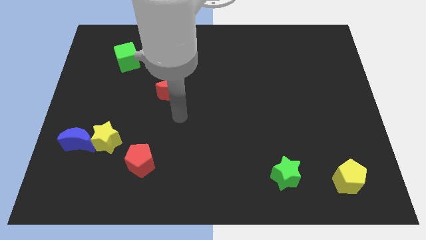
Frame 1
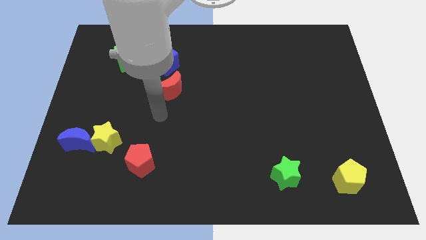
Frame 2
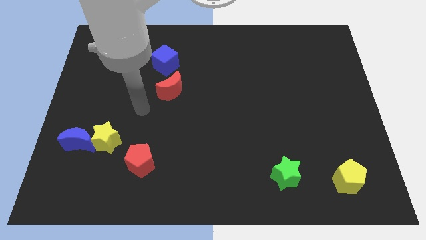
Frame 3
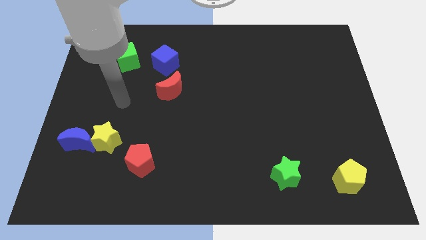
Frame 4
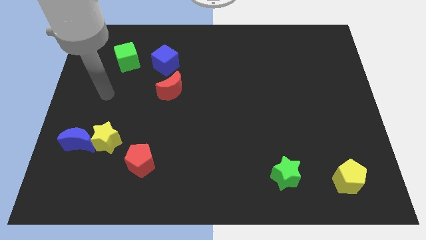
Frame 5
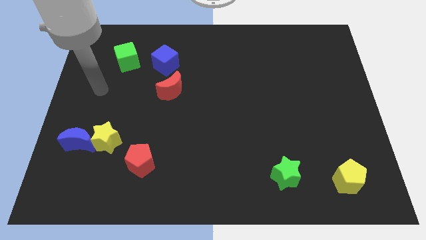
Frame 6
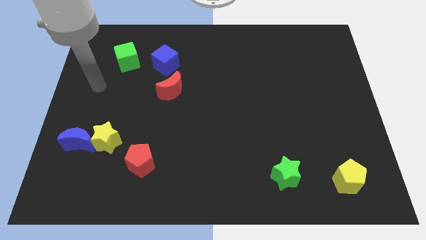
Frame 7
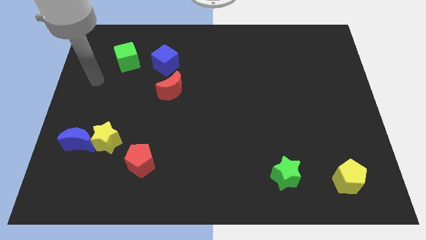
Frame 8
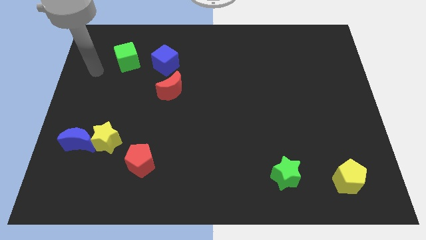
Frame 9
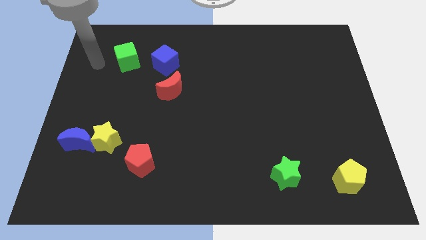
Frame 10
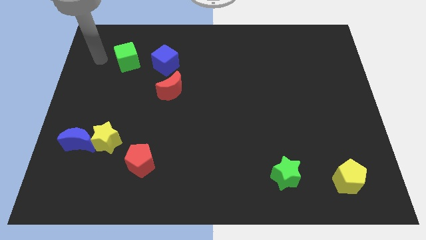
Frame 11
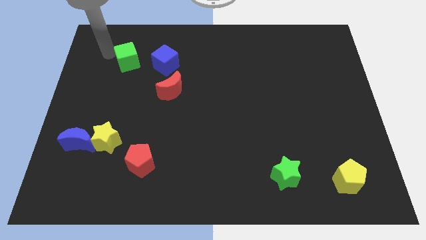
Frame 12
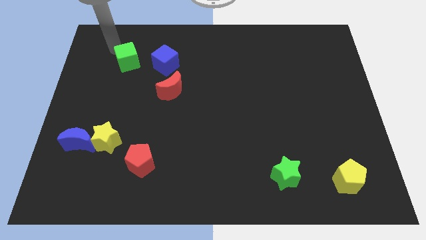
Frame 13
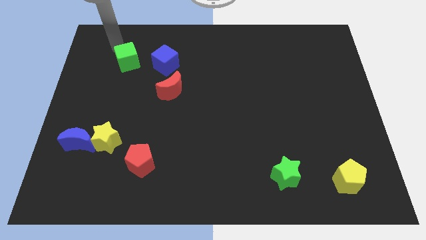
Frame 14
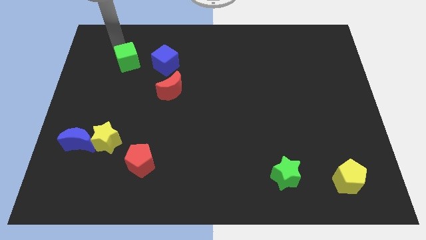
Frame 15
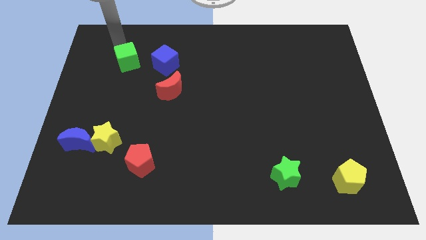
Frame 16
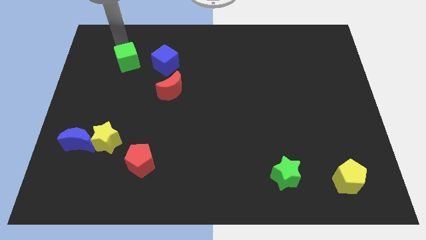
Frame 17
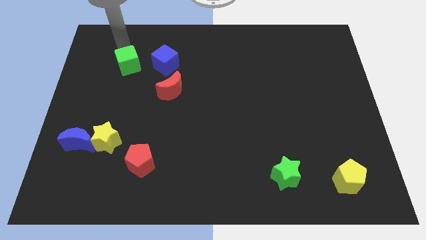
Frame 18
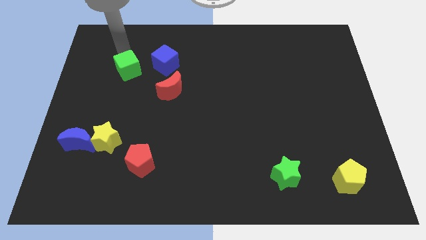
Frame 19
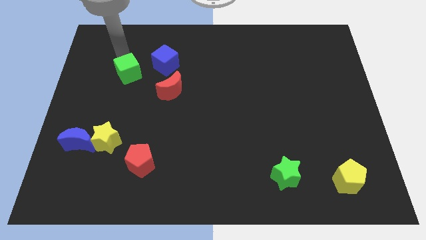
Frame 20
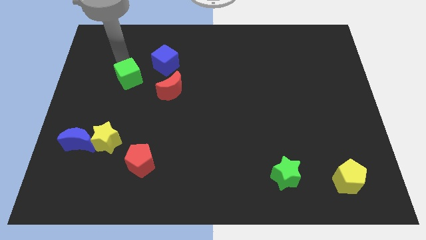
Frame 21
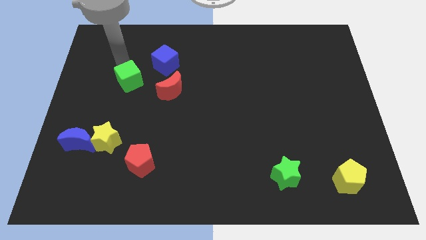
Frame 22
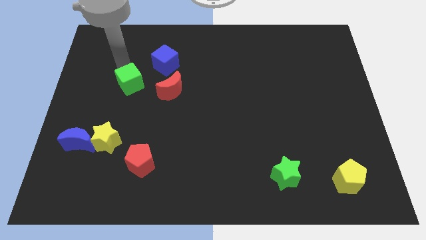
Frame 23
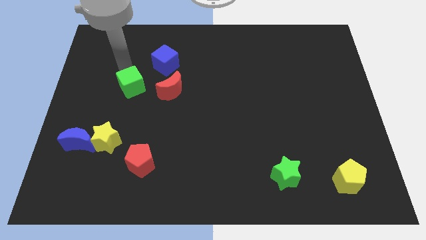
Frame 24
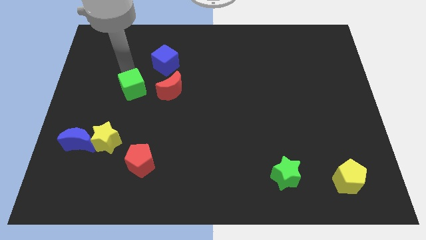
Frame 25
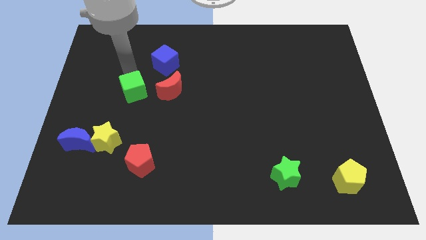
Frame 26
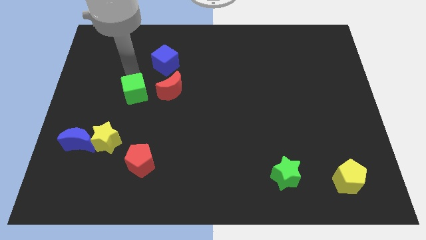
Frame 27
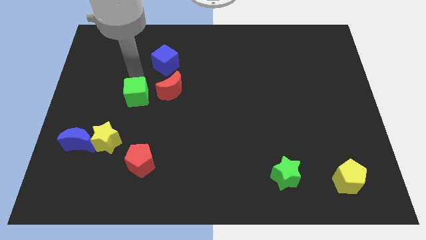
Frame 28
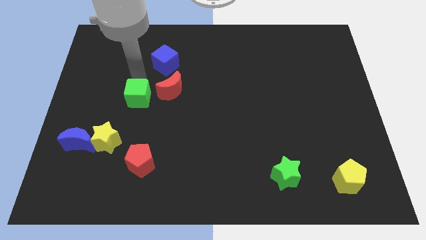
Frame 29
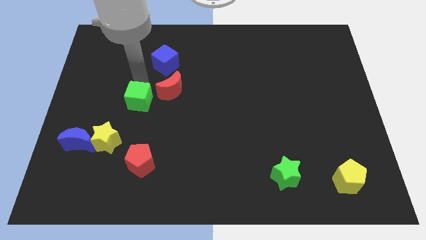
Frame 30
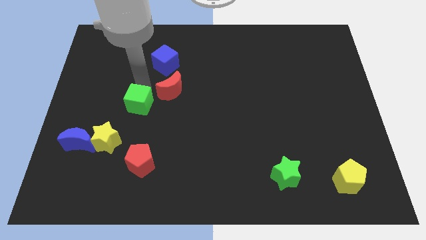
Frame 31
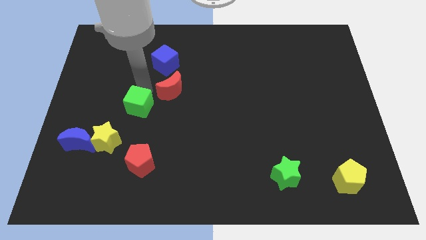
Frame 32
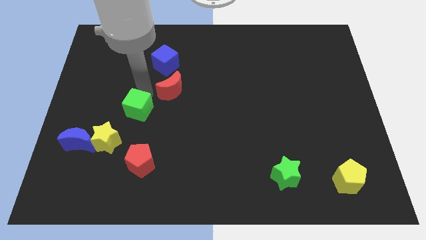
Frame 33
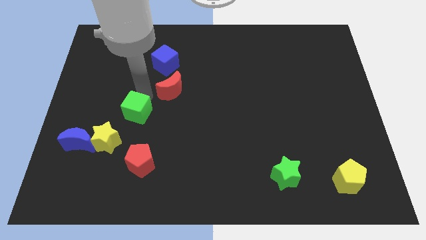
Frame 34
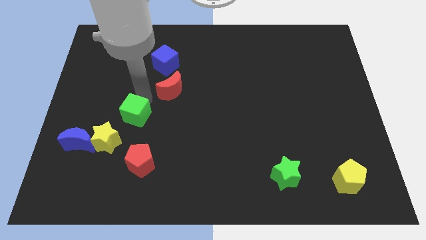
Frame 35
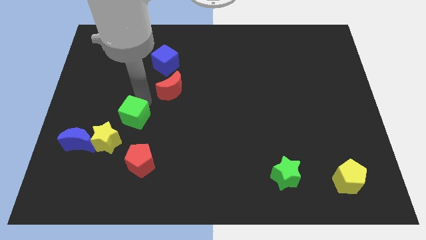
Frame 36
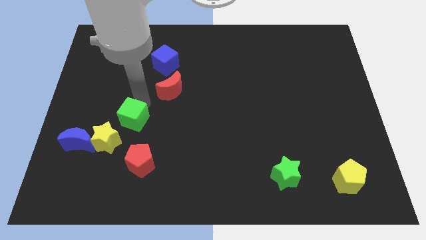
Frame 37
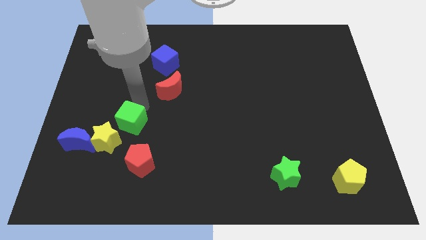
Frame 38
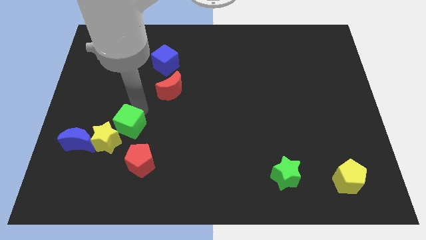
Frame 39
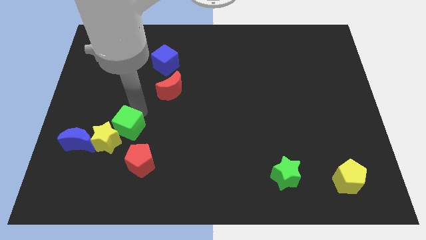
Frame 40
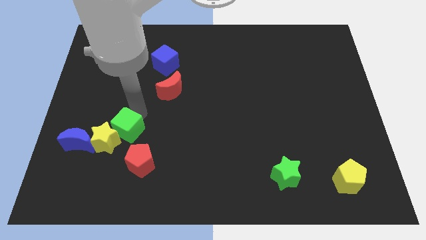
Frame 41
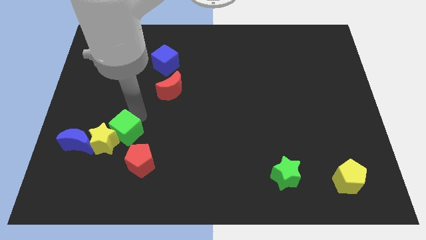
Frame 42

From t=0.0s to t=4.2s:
put the green cube close to the yellow star

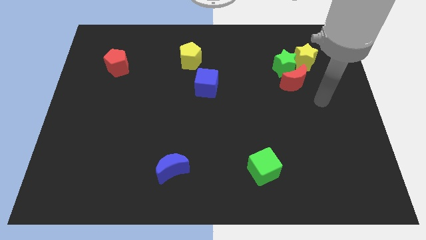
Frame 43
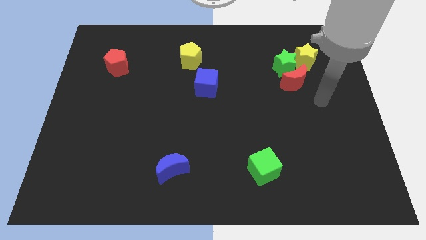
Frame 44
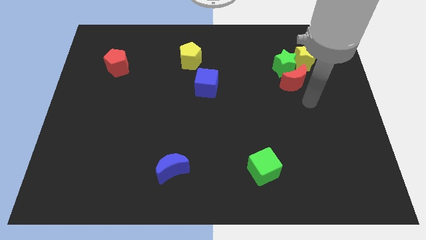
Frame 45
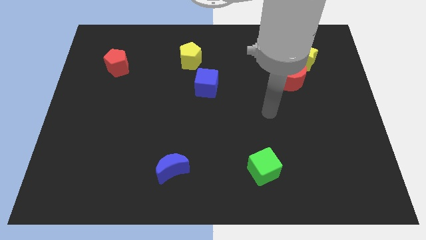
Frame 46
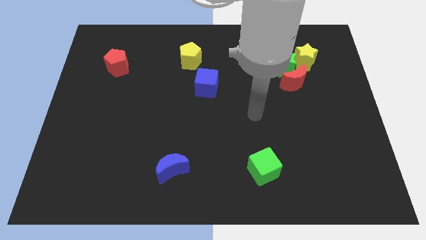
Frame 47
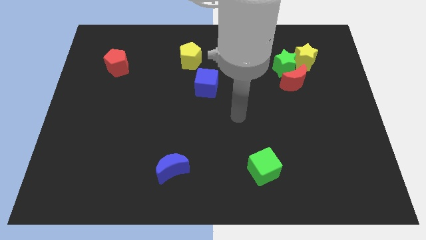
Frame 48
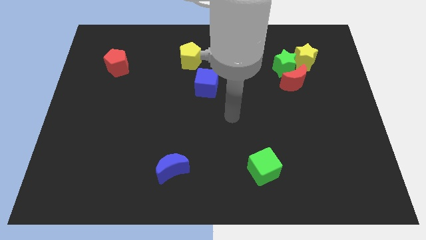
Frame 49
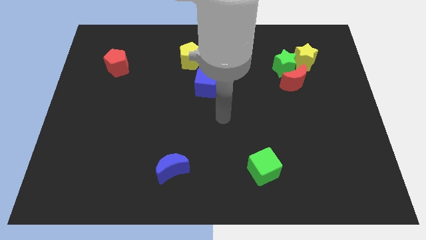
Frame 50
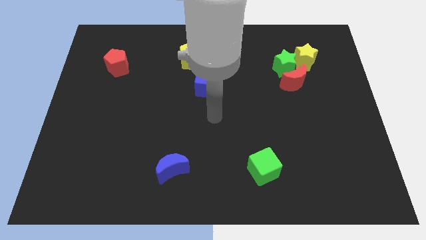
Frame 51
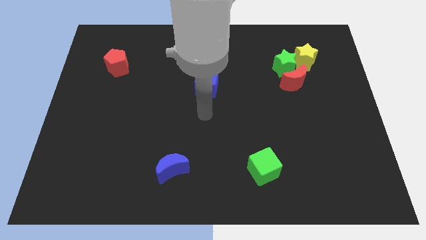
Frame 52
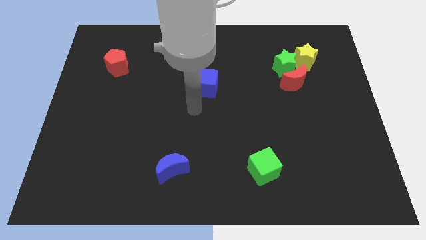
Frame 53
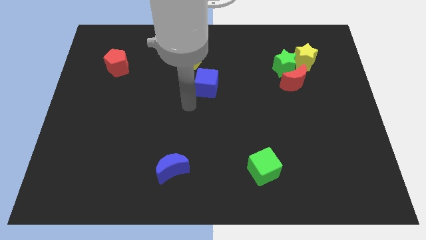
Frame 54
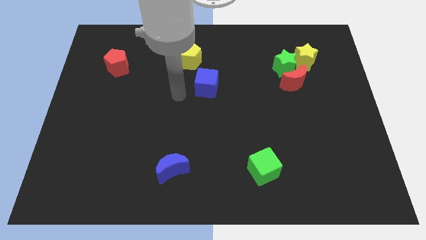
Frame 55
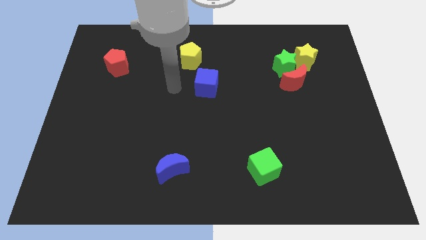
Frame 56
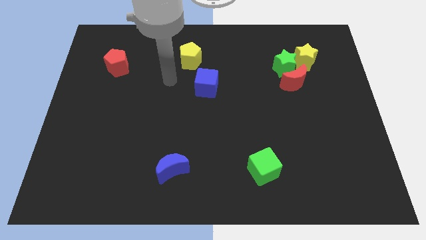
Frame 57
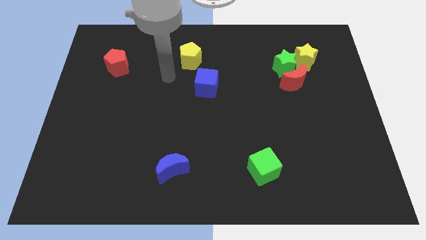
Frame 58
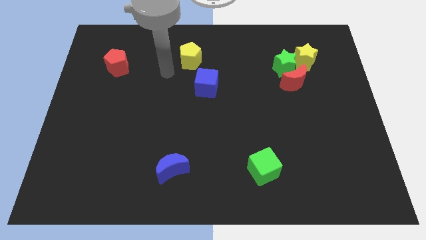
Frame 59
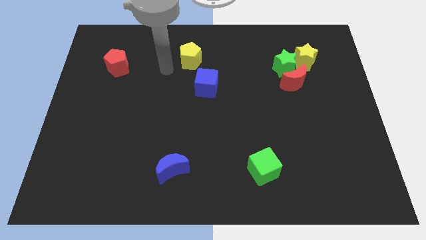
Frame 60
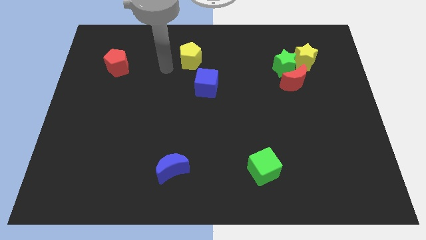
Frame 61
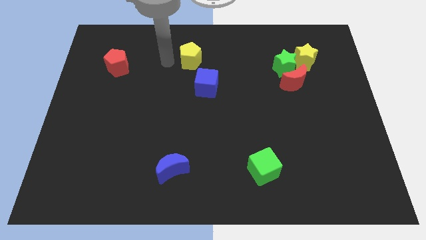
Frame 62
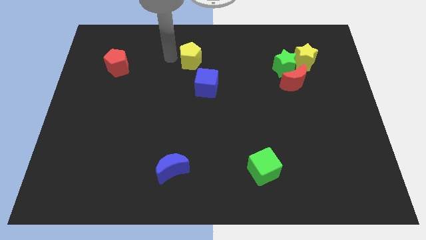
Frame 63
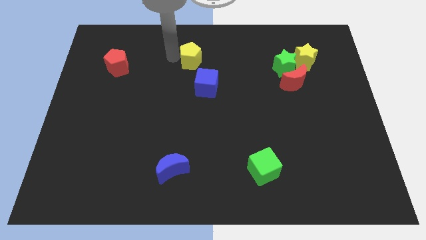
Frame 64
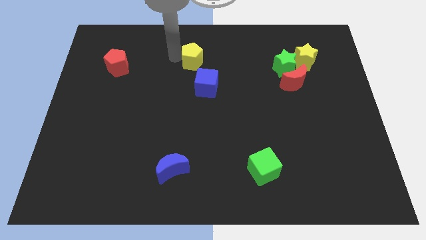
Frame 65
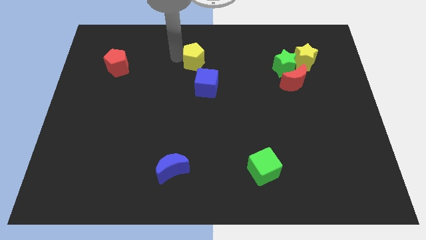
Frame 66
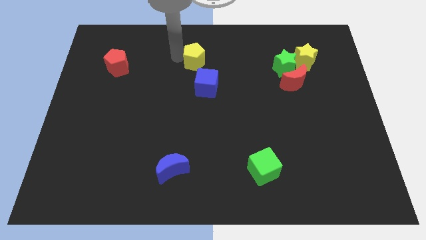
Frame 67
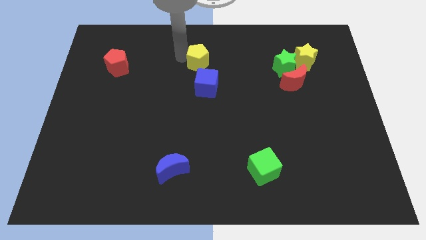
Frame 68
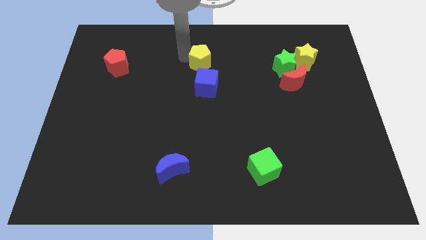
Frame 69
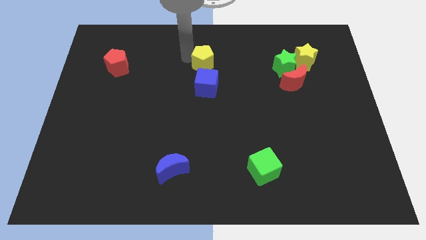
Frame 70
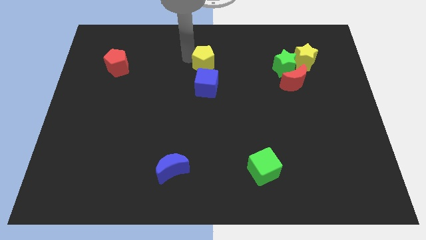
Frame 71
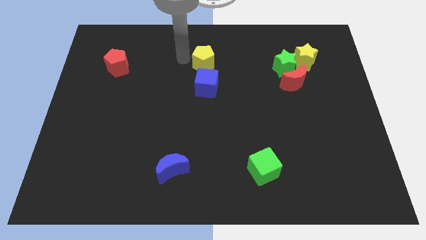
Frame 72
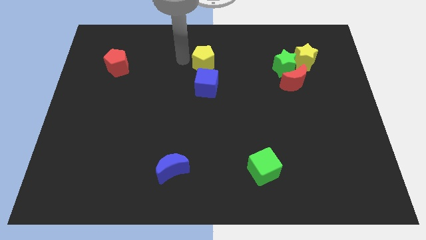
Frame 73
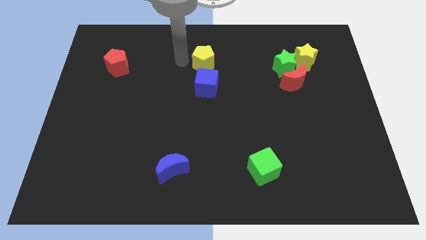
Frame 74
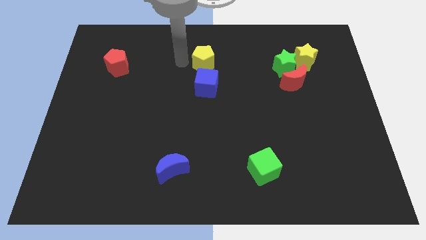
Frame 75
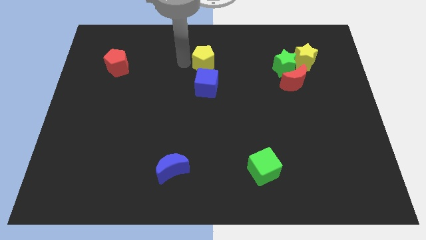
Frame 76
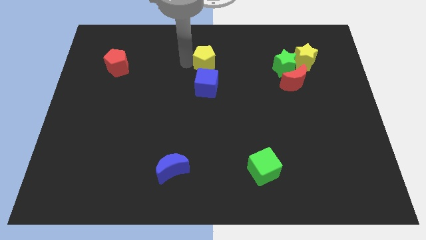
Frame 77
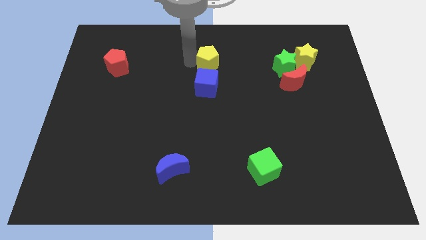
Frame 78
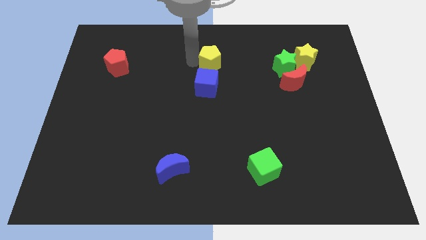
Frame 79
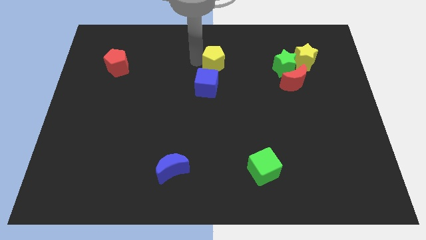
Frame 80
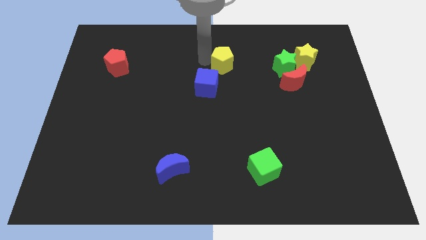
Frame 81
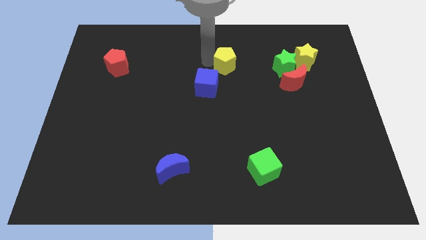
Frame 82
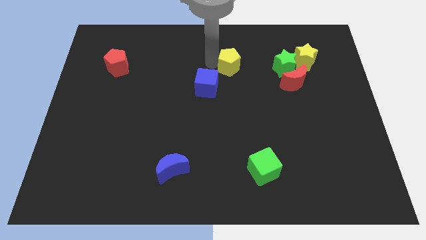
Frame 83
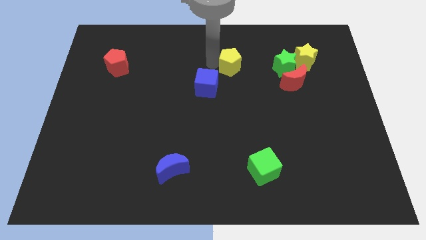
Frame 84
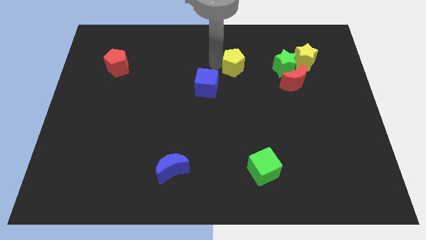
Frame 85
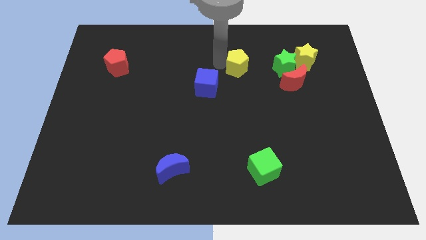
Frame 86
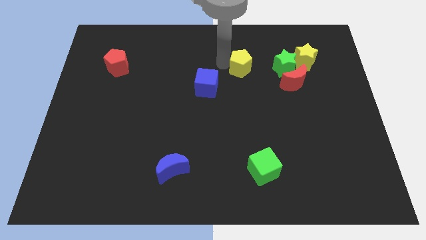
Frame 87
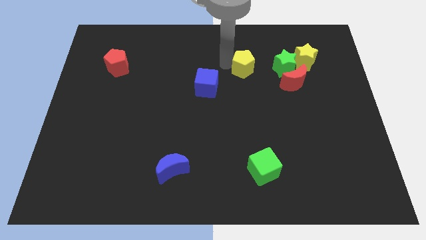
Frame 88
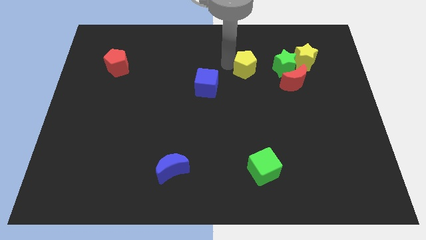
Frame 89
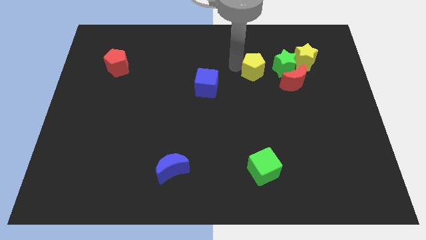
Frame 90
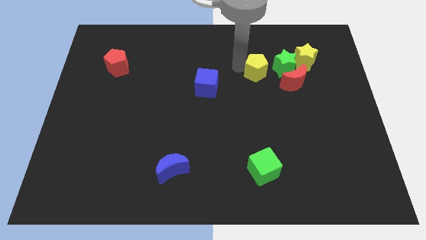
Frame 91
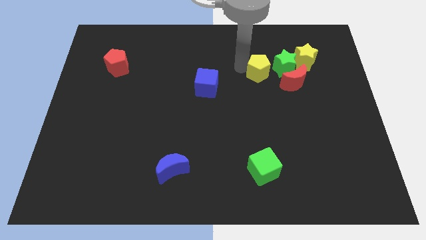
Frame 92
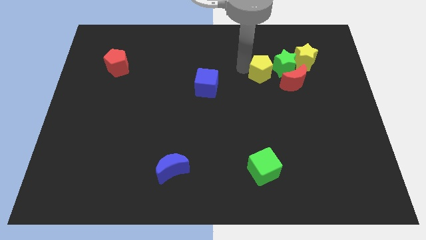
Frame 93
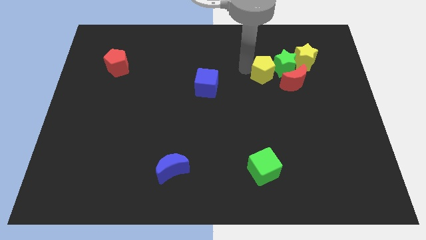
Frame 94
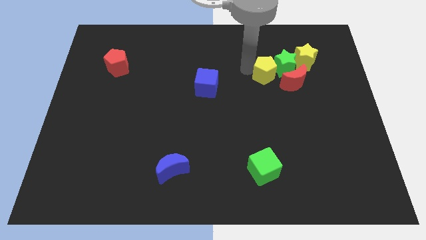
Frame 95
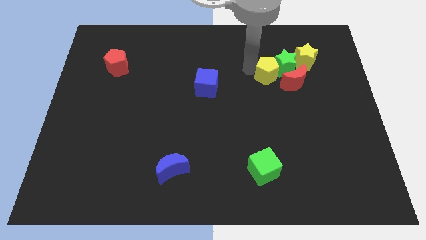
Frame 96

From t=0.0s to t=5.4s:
push the yellow pentagon to the green star
